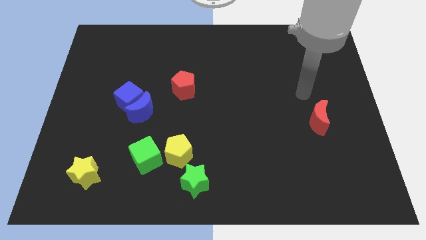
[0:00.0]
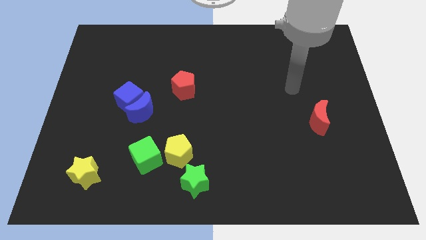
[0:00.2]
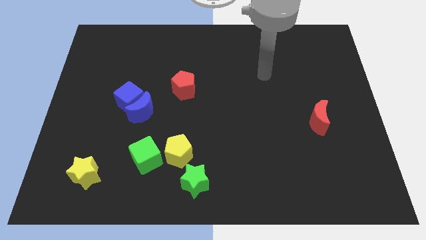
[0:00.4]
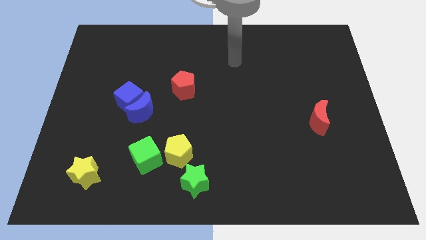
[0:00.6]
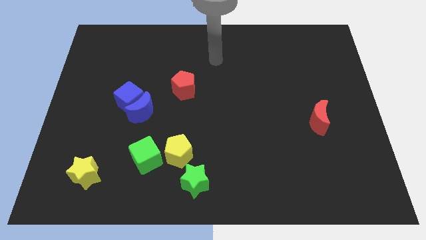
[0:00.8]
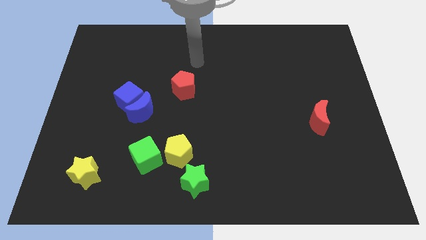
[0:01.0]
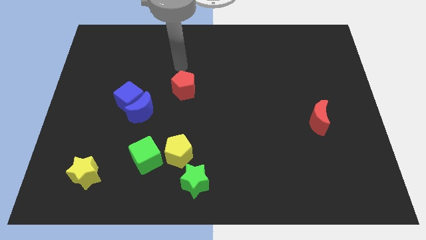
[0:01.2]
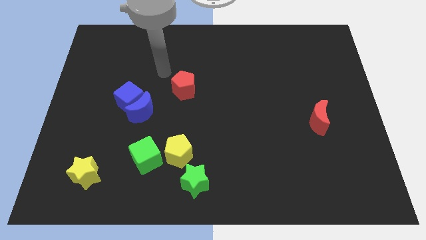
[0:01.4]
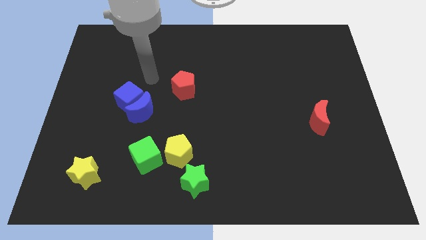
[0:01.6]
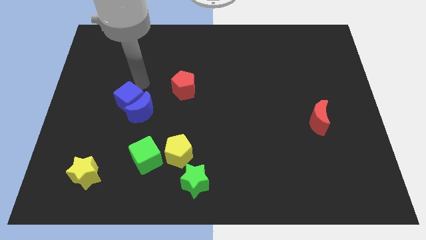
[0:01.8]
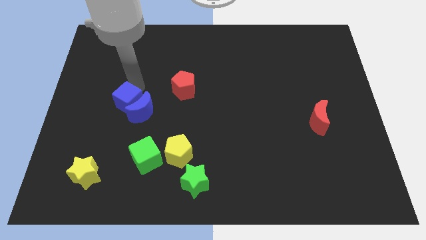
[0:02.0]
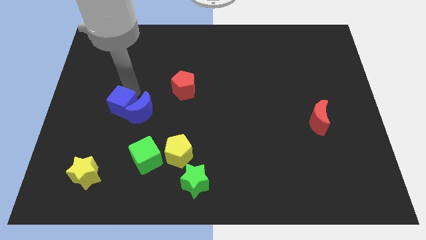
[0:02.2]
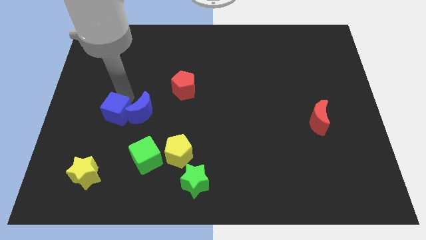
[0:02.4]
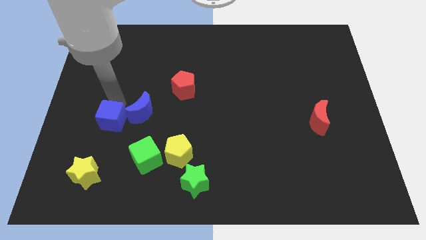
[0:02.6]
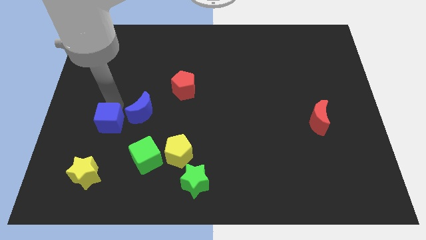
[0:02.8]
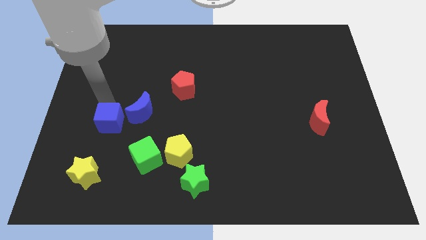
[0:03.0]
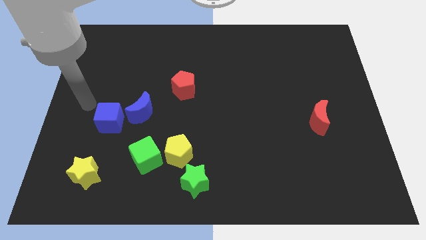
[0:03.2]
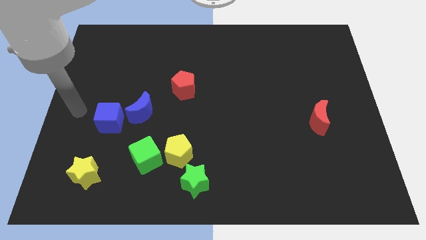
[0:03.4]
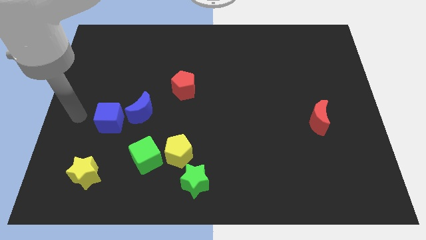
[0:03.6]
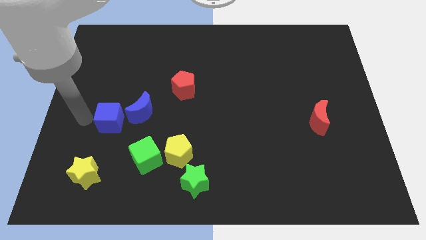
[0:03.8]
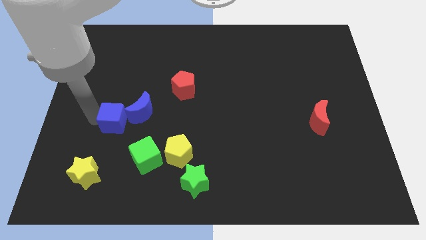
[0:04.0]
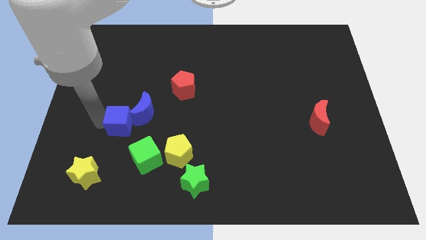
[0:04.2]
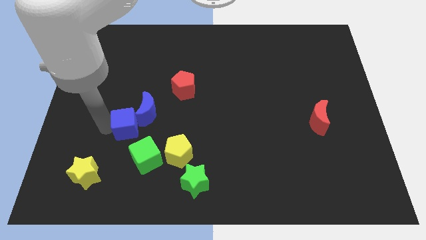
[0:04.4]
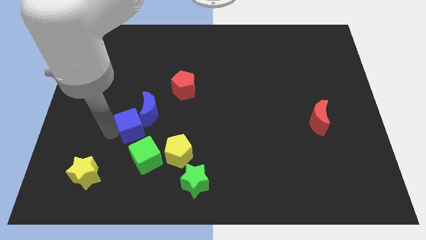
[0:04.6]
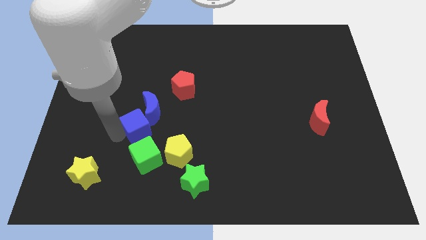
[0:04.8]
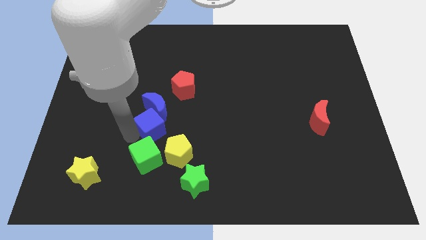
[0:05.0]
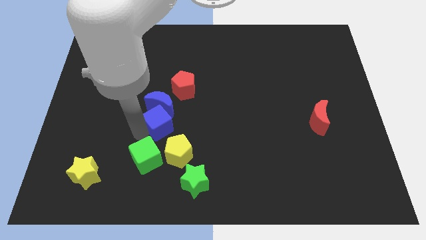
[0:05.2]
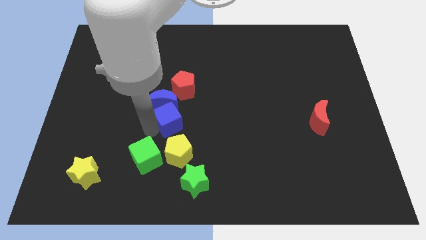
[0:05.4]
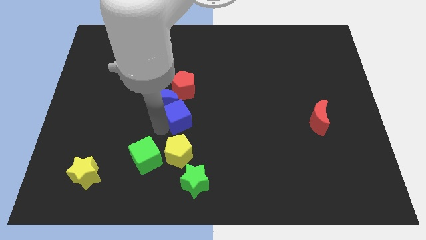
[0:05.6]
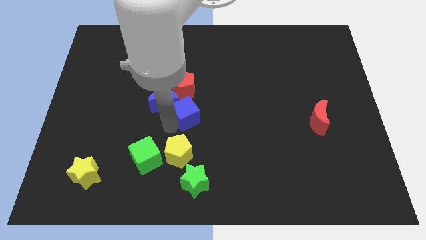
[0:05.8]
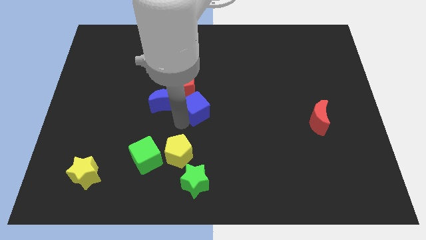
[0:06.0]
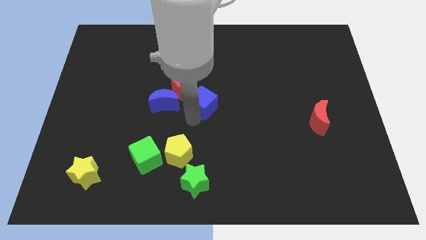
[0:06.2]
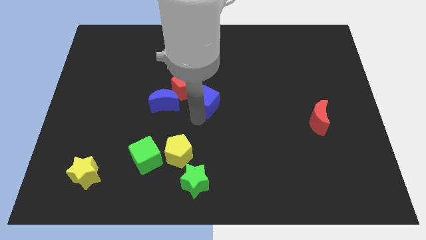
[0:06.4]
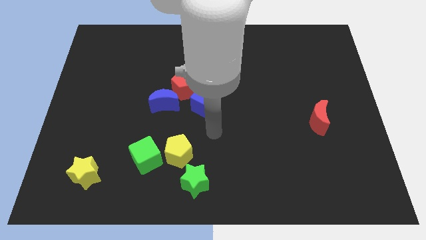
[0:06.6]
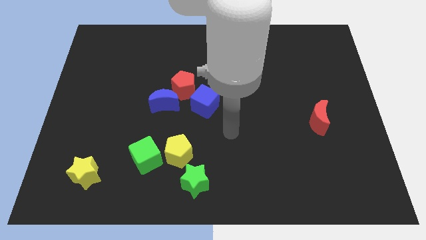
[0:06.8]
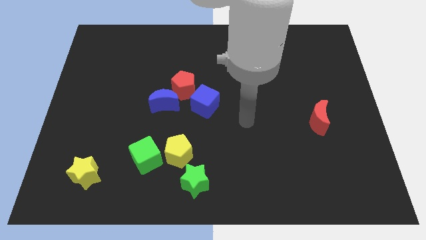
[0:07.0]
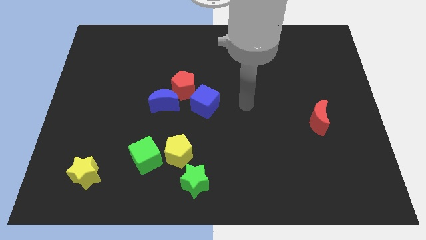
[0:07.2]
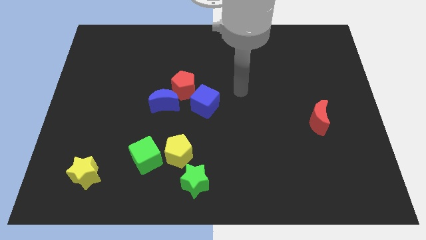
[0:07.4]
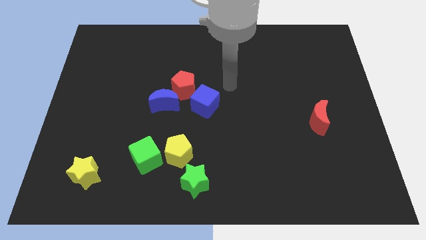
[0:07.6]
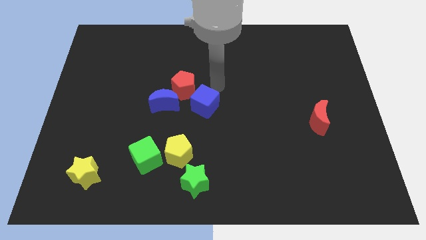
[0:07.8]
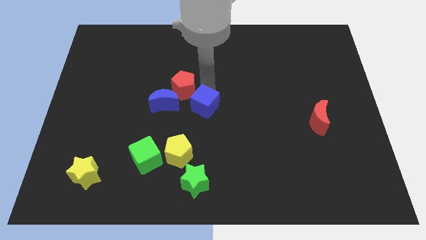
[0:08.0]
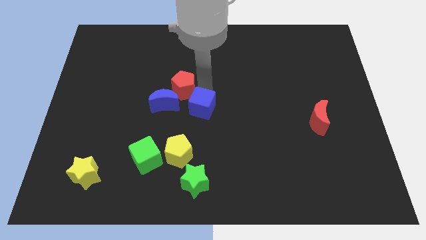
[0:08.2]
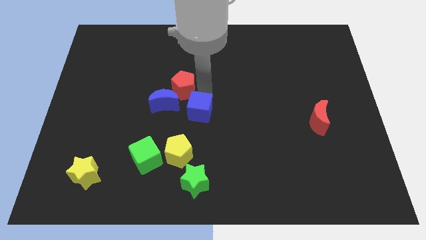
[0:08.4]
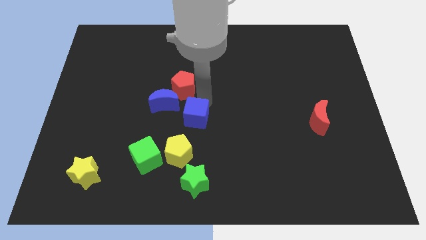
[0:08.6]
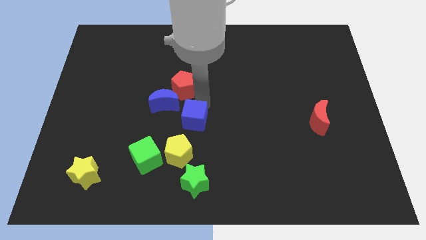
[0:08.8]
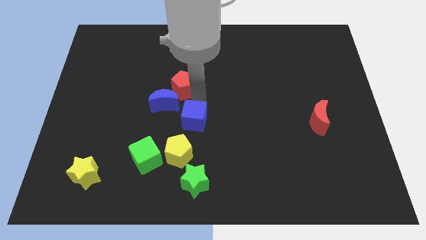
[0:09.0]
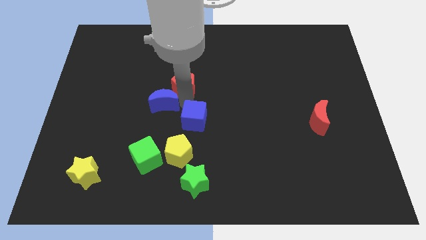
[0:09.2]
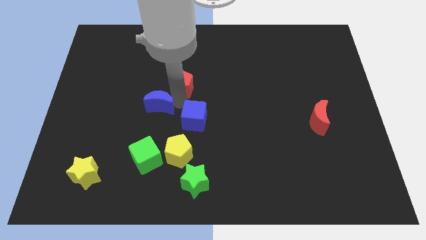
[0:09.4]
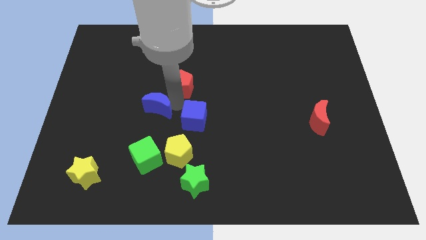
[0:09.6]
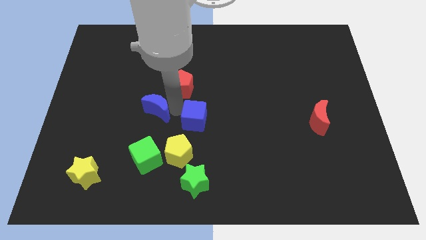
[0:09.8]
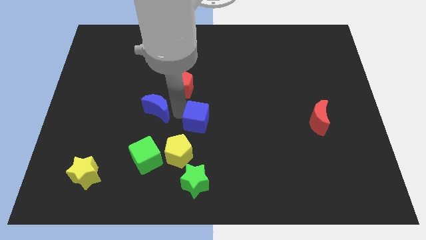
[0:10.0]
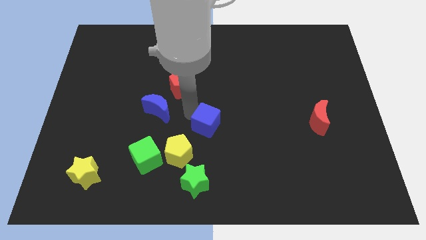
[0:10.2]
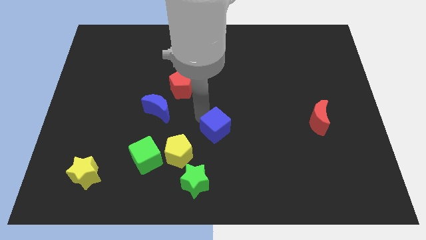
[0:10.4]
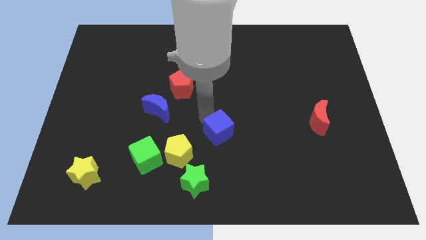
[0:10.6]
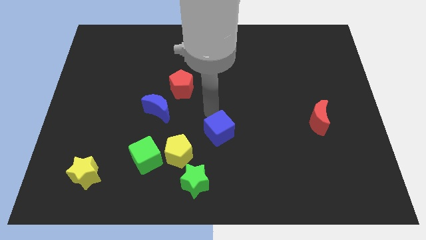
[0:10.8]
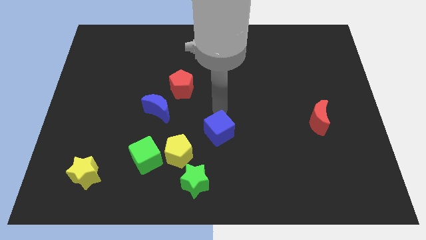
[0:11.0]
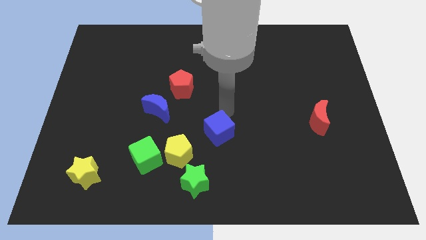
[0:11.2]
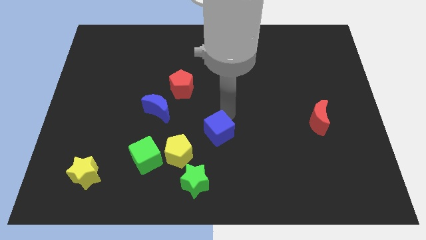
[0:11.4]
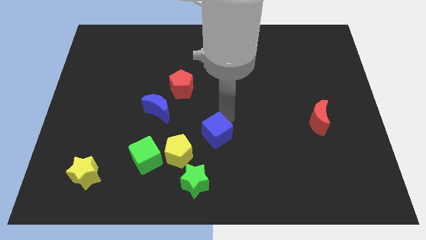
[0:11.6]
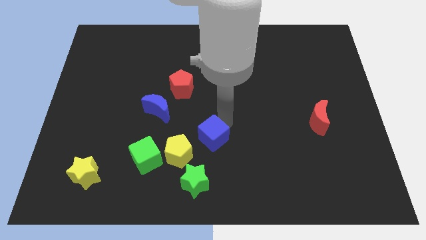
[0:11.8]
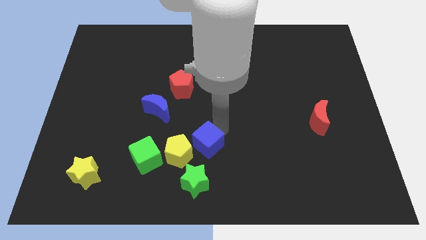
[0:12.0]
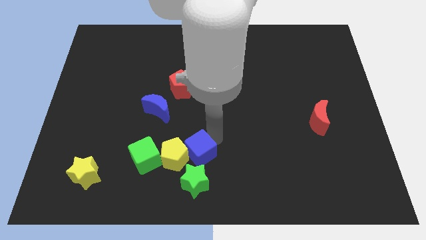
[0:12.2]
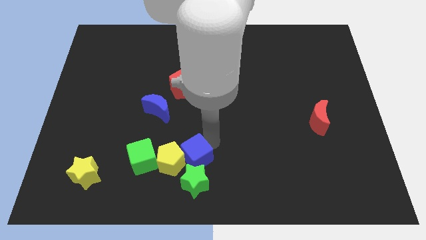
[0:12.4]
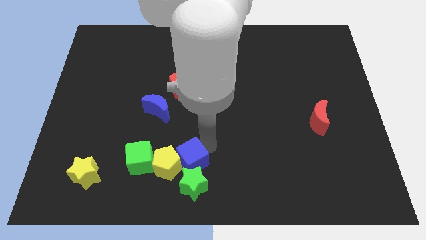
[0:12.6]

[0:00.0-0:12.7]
put the blue cube towards the green star

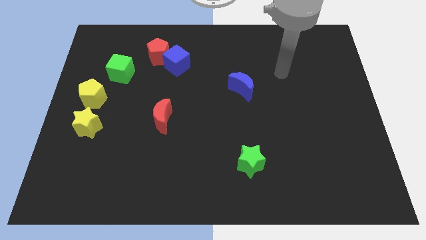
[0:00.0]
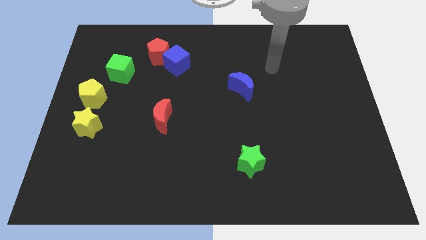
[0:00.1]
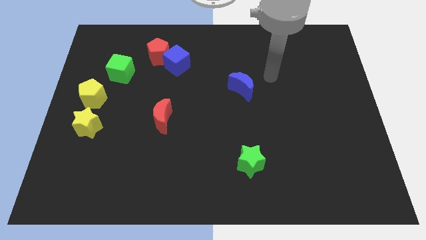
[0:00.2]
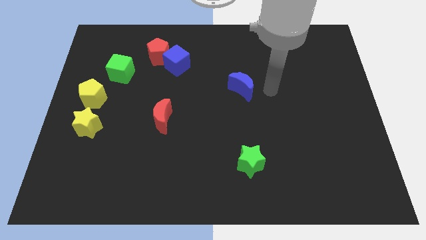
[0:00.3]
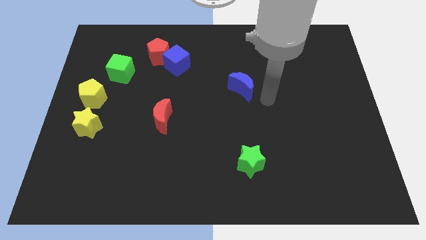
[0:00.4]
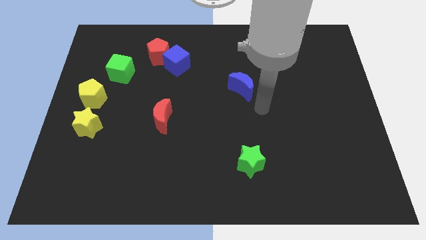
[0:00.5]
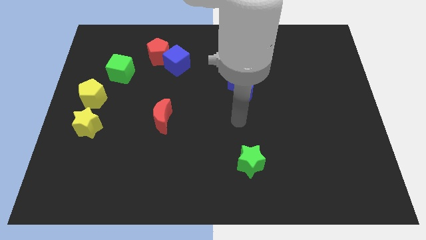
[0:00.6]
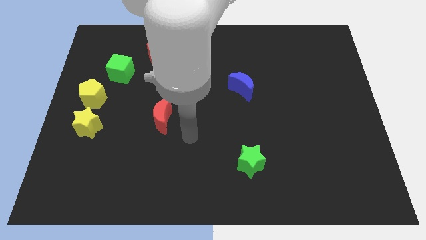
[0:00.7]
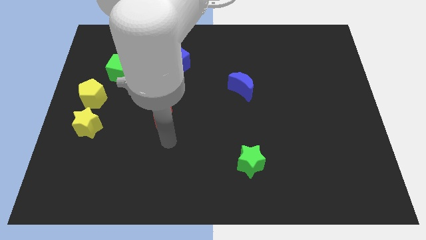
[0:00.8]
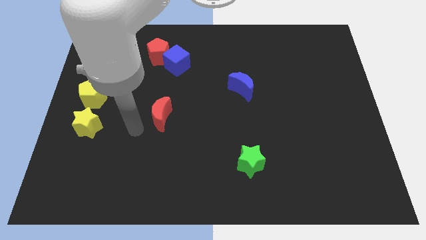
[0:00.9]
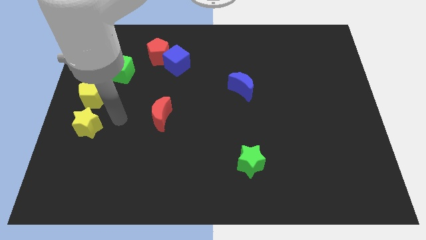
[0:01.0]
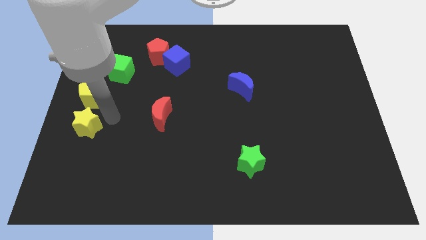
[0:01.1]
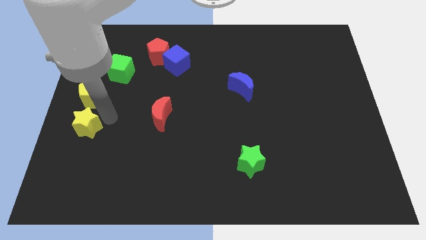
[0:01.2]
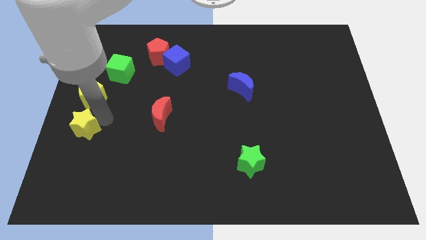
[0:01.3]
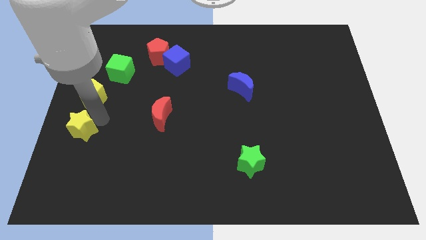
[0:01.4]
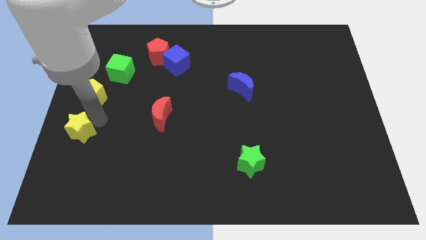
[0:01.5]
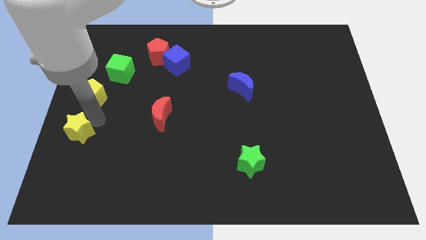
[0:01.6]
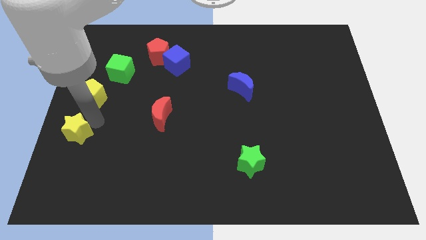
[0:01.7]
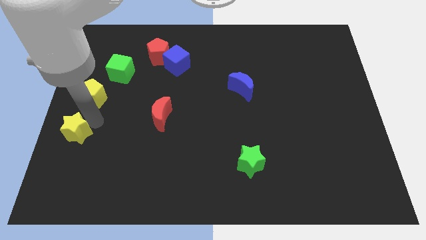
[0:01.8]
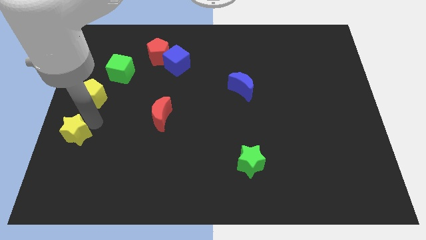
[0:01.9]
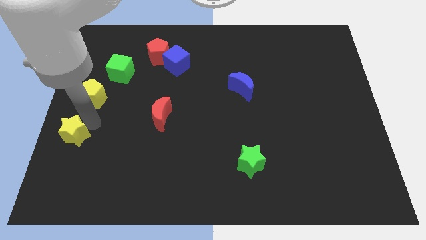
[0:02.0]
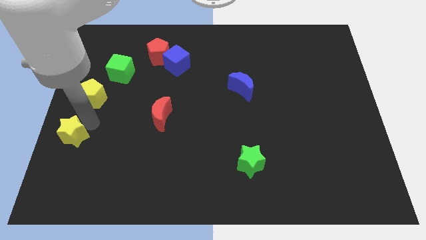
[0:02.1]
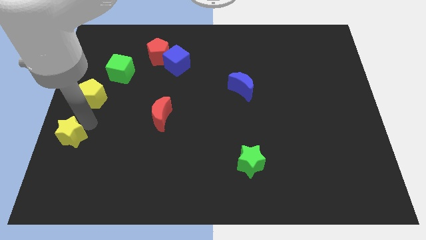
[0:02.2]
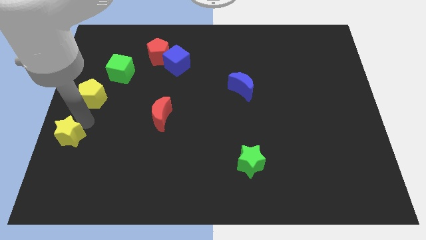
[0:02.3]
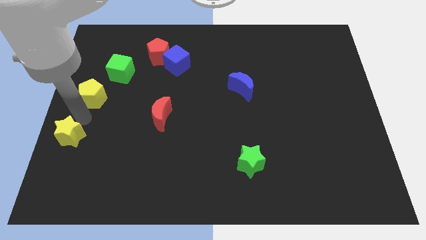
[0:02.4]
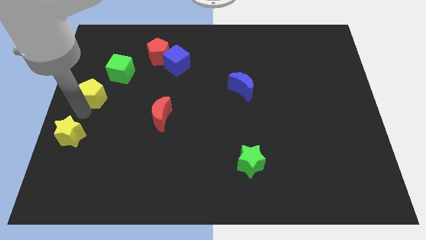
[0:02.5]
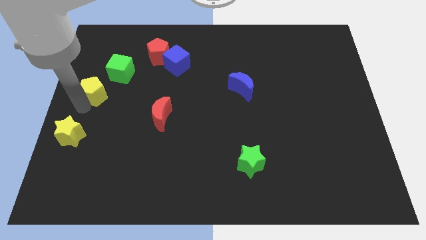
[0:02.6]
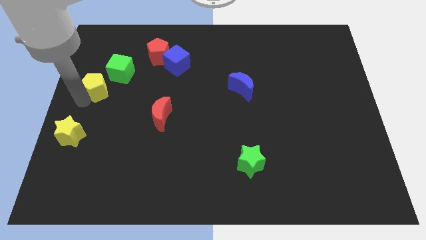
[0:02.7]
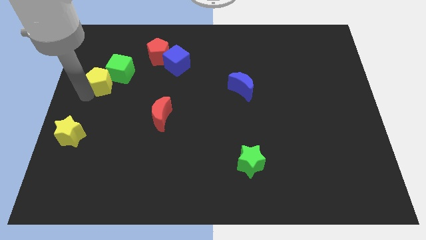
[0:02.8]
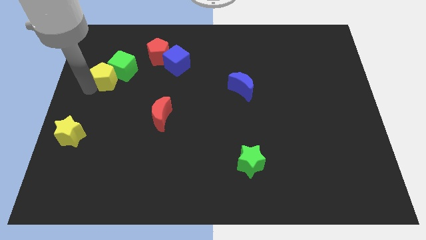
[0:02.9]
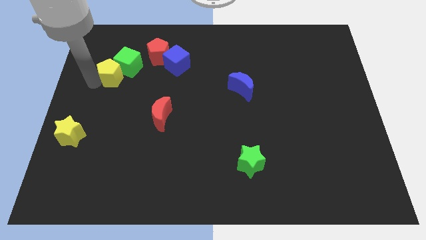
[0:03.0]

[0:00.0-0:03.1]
move the yellow pentagon next to the green cube
